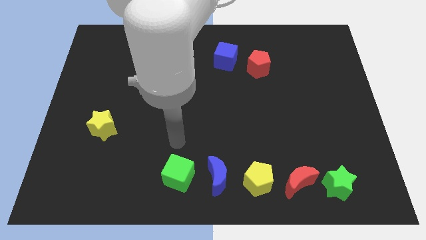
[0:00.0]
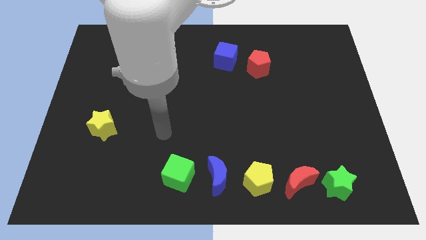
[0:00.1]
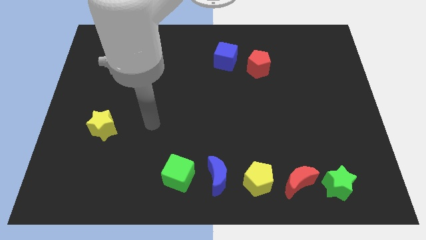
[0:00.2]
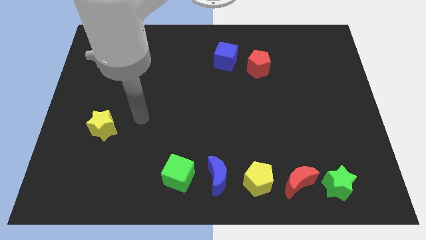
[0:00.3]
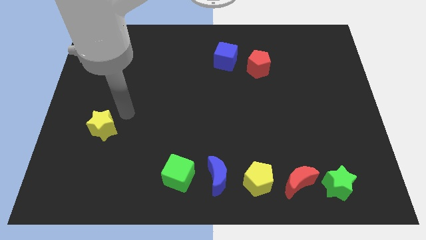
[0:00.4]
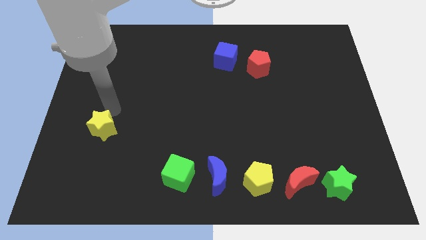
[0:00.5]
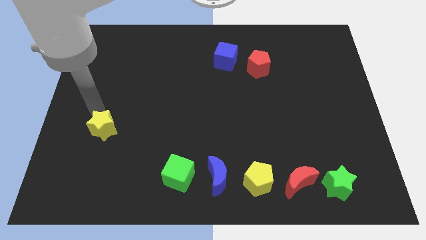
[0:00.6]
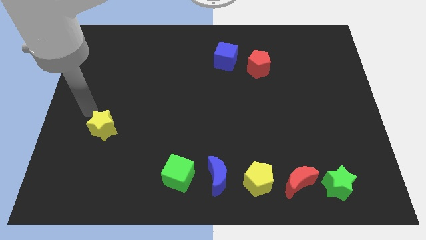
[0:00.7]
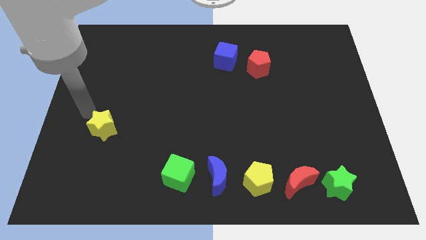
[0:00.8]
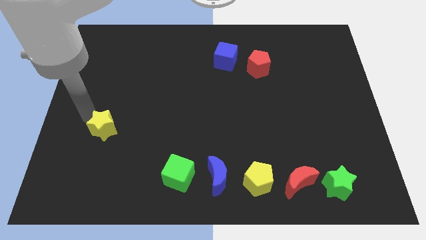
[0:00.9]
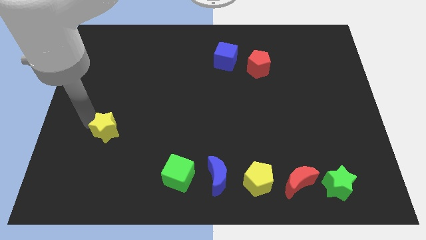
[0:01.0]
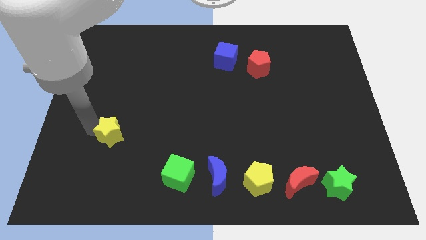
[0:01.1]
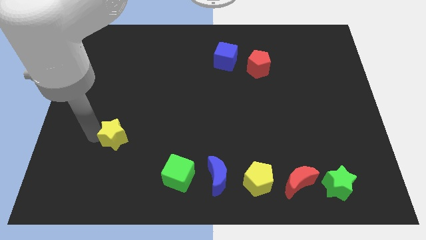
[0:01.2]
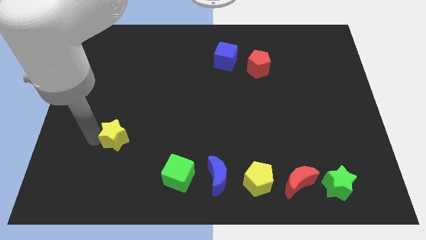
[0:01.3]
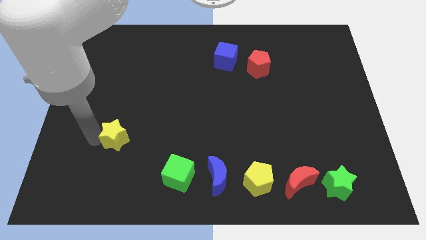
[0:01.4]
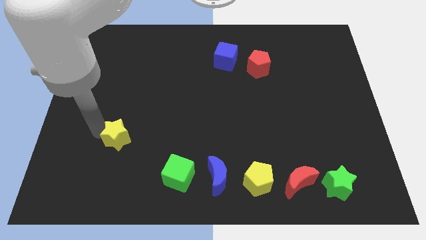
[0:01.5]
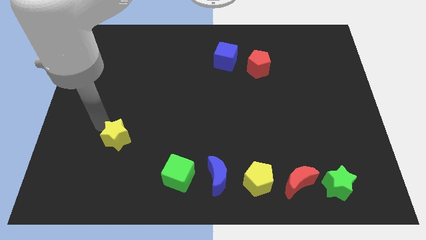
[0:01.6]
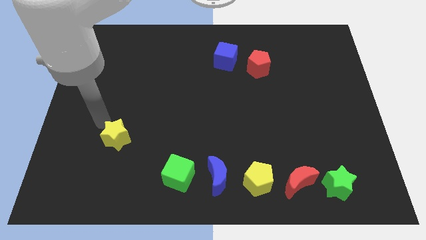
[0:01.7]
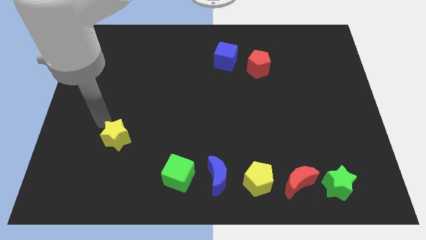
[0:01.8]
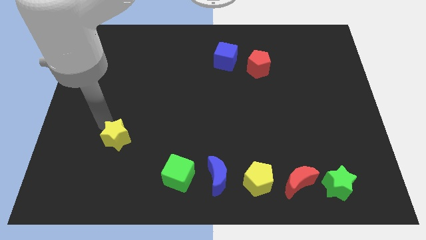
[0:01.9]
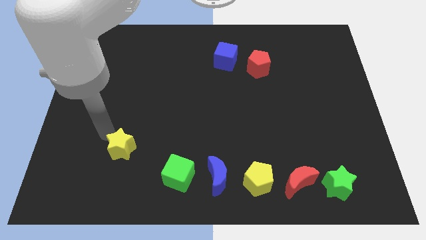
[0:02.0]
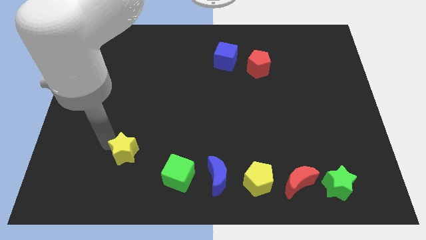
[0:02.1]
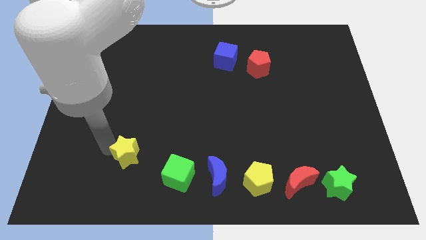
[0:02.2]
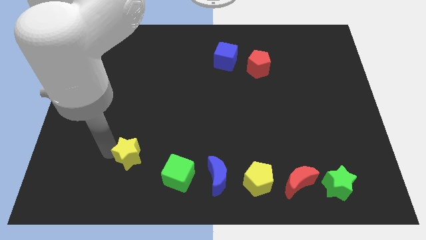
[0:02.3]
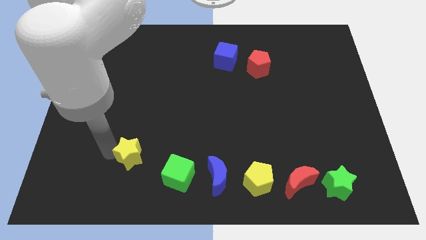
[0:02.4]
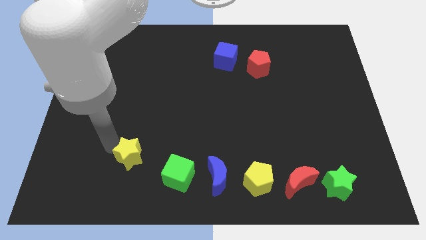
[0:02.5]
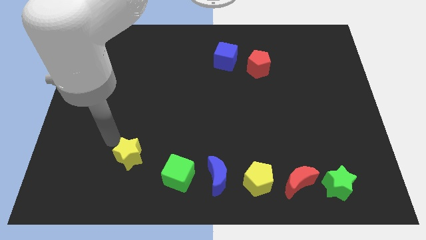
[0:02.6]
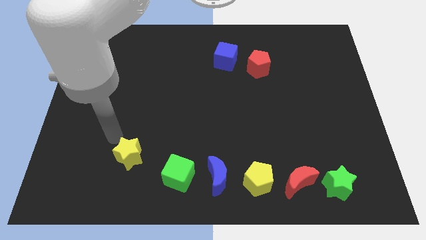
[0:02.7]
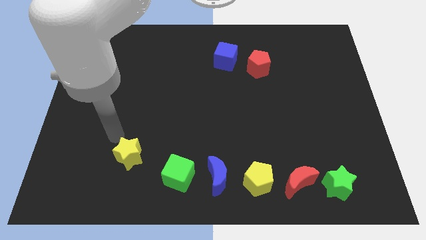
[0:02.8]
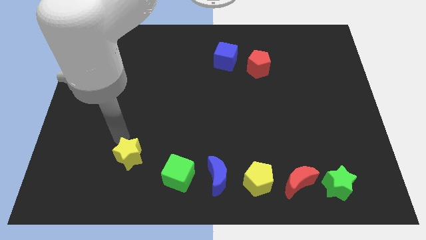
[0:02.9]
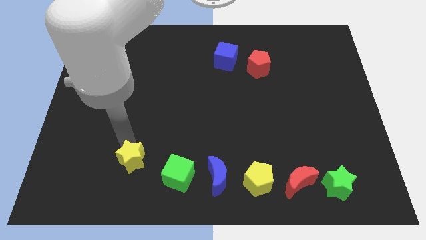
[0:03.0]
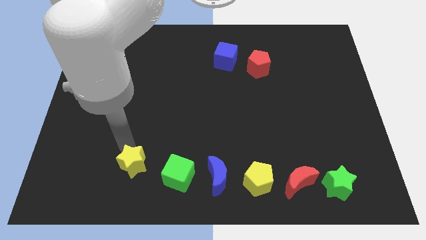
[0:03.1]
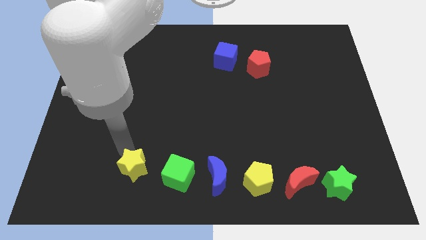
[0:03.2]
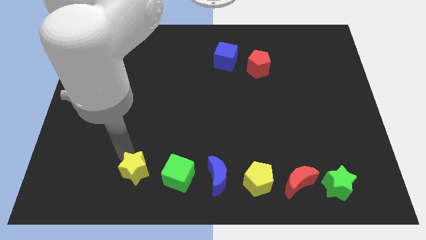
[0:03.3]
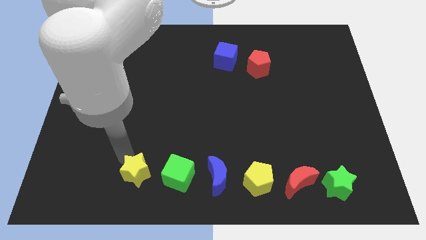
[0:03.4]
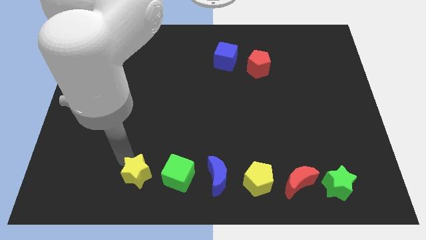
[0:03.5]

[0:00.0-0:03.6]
move yellow star to the bottom of the board

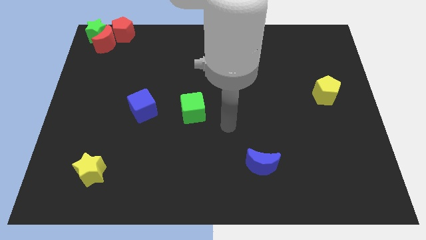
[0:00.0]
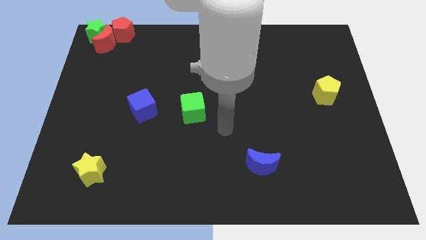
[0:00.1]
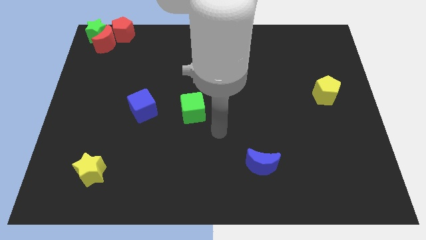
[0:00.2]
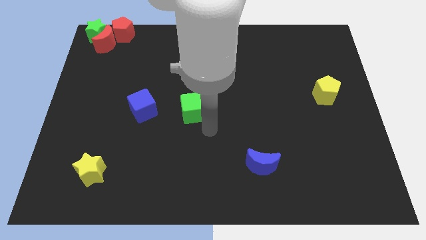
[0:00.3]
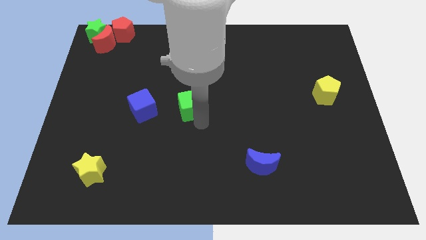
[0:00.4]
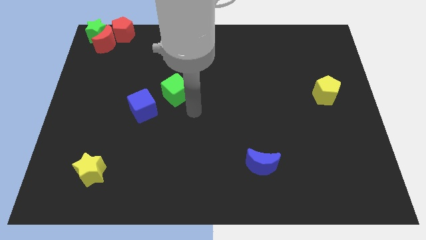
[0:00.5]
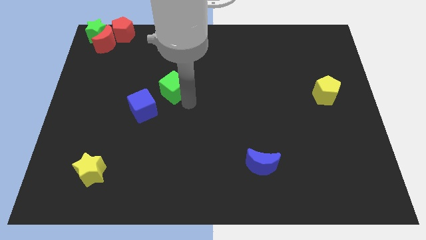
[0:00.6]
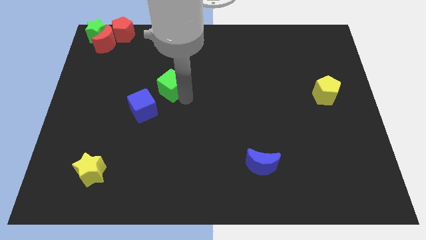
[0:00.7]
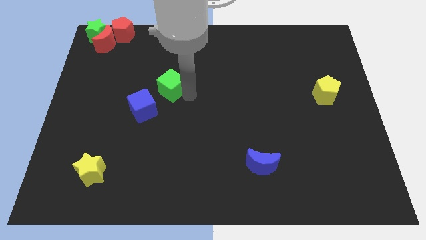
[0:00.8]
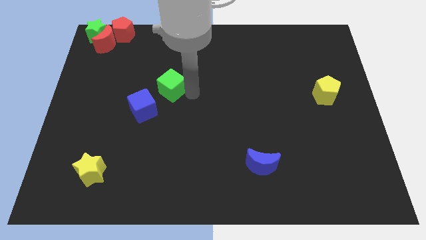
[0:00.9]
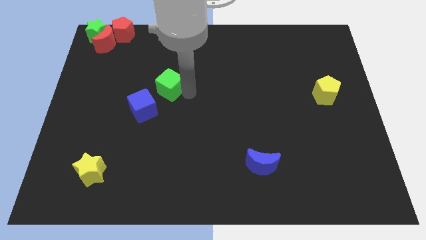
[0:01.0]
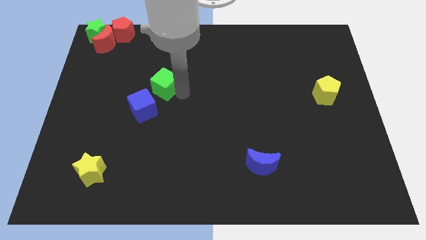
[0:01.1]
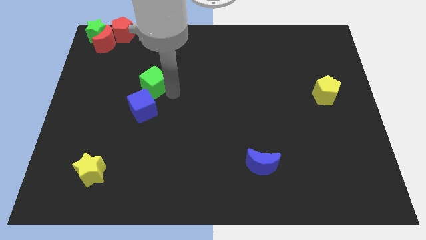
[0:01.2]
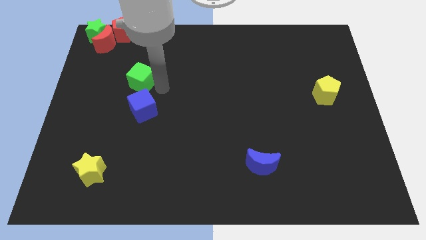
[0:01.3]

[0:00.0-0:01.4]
place green cube above blue cube

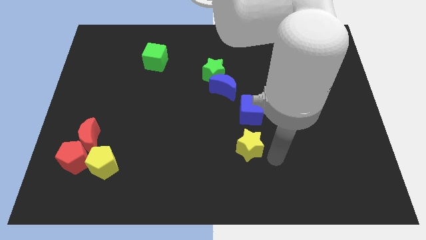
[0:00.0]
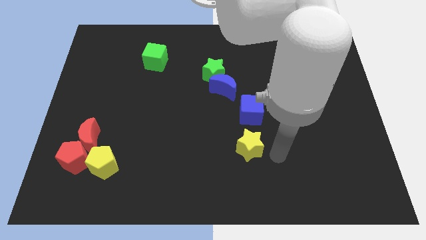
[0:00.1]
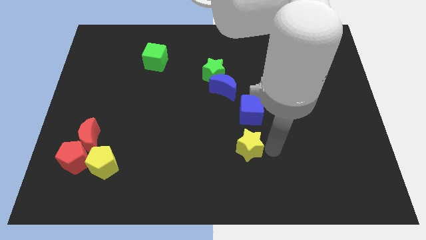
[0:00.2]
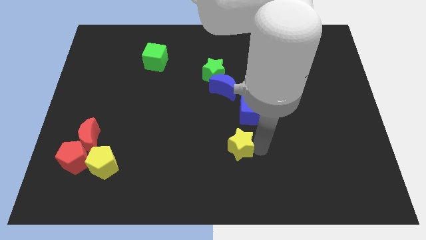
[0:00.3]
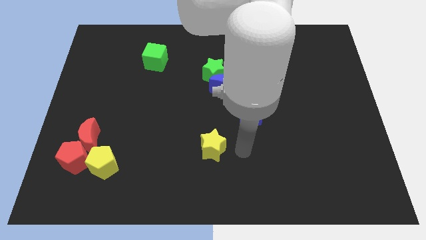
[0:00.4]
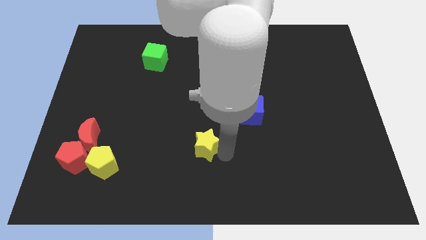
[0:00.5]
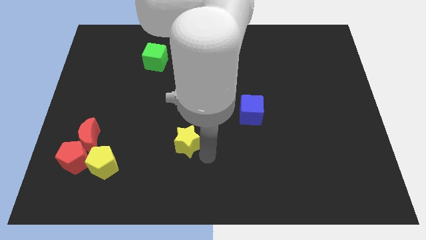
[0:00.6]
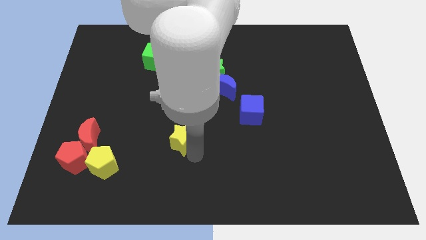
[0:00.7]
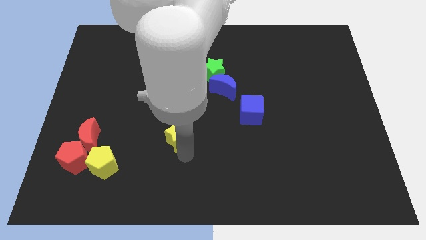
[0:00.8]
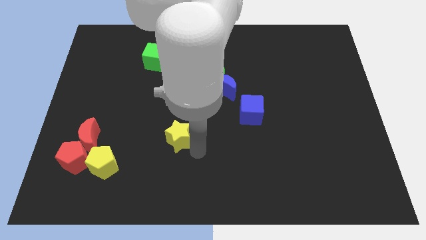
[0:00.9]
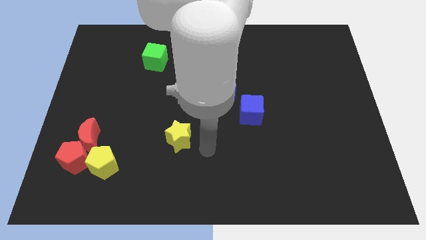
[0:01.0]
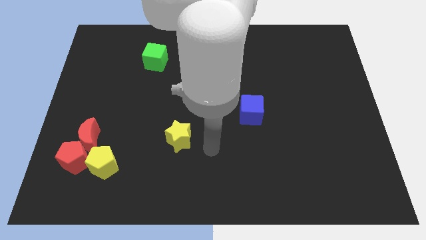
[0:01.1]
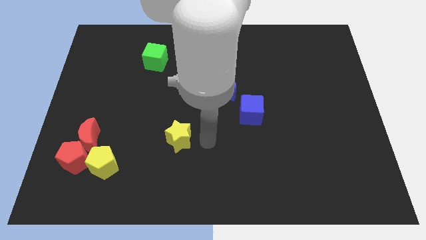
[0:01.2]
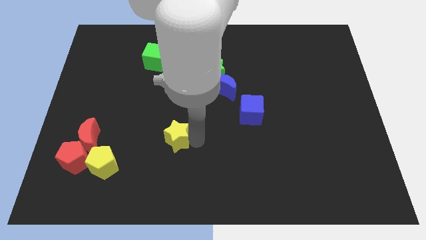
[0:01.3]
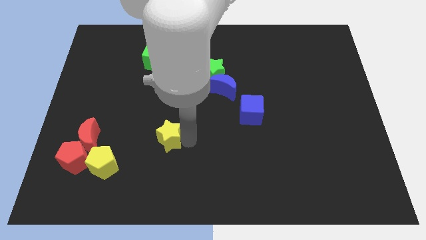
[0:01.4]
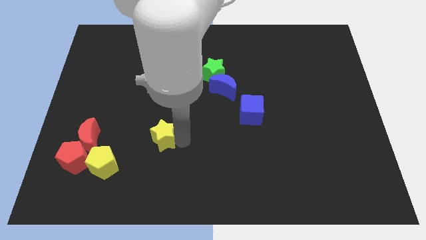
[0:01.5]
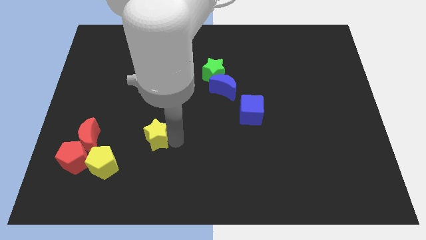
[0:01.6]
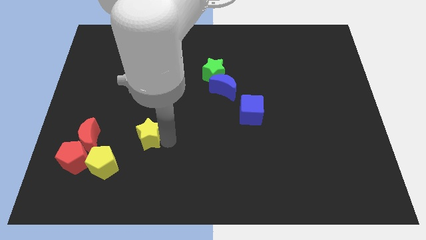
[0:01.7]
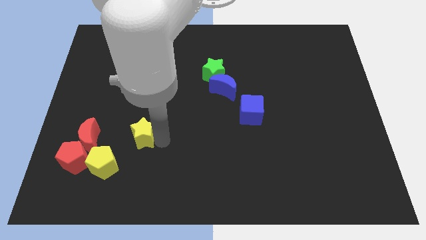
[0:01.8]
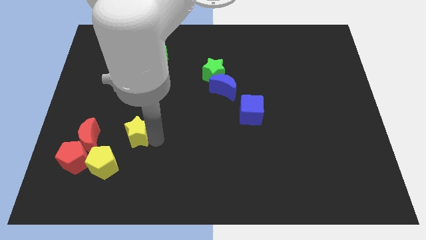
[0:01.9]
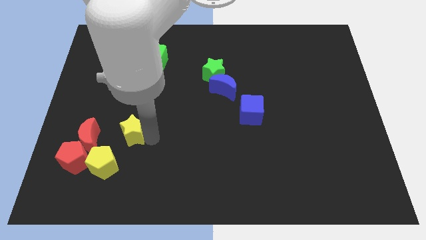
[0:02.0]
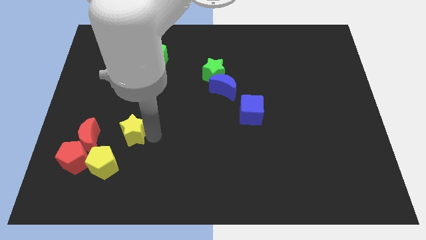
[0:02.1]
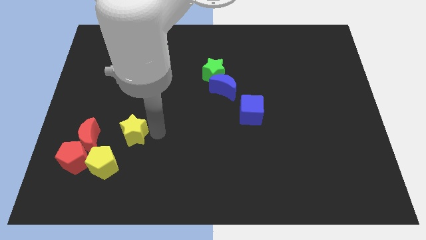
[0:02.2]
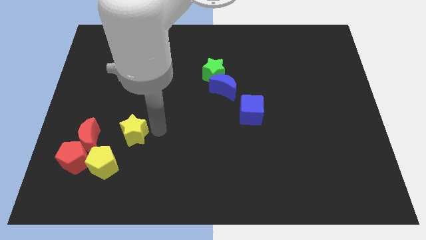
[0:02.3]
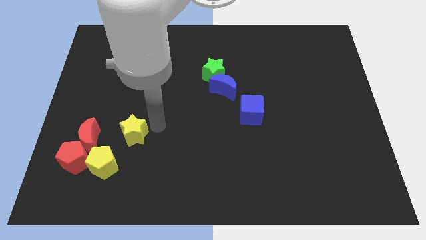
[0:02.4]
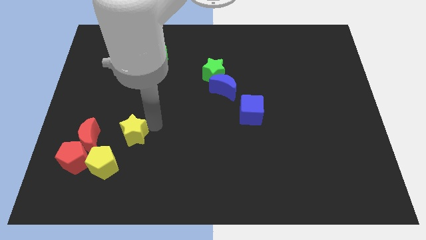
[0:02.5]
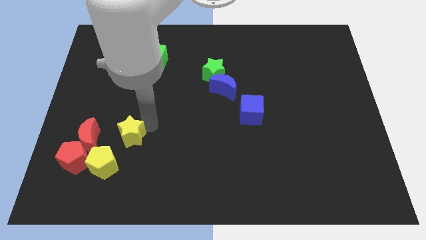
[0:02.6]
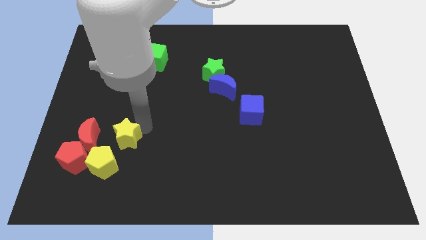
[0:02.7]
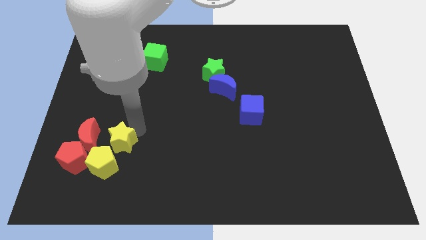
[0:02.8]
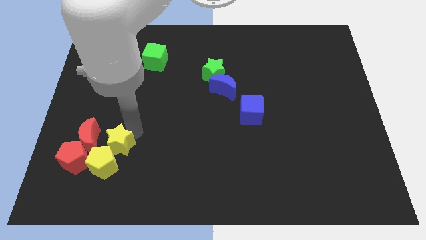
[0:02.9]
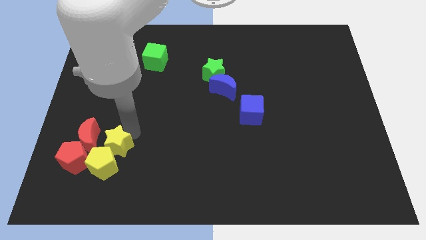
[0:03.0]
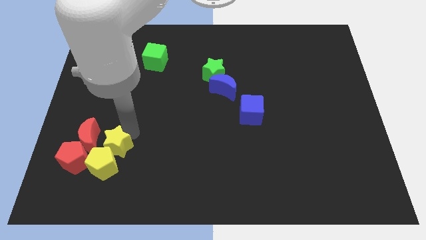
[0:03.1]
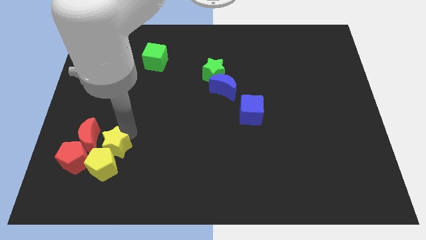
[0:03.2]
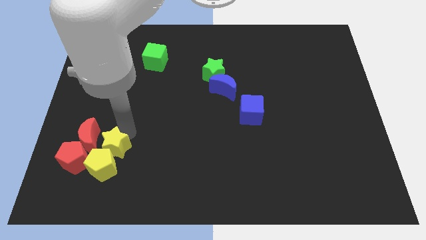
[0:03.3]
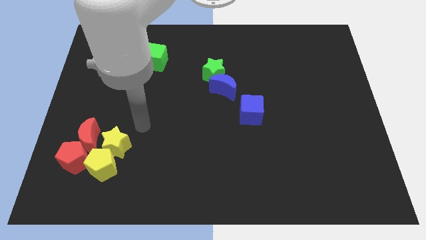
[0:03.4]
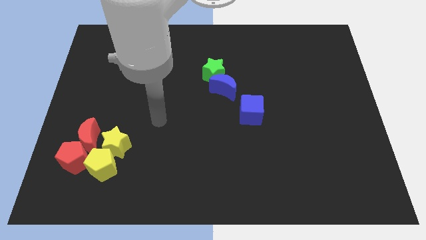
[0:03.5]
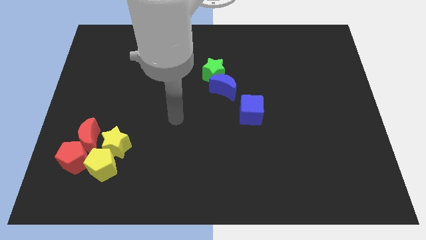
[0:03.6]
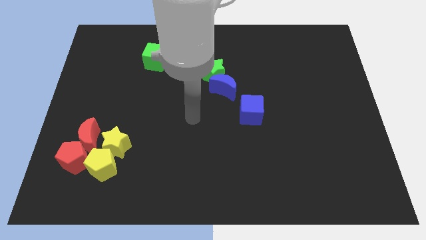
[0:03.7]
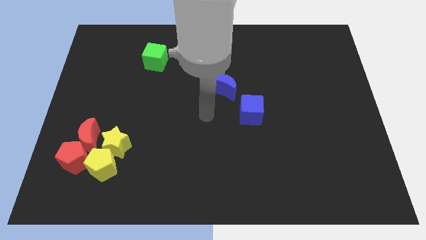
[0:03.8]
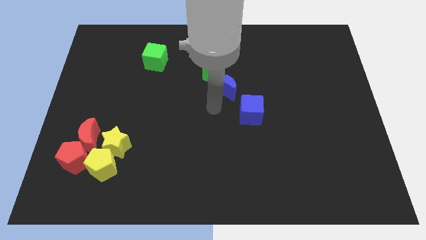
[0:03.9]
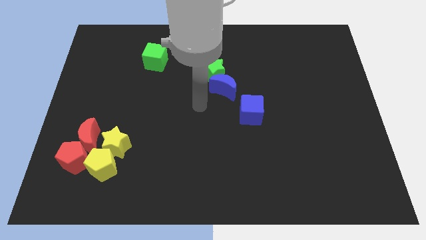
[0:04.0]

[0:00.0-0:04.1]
move yellow star above yellow pentagon

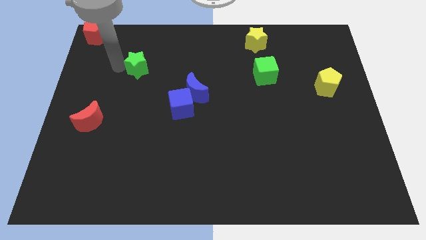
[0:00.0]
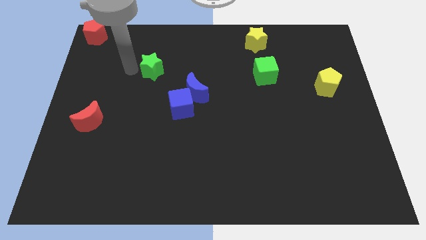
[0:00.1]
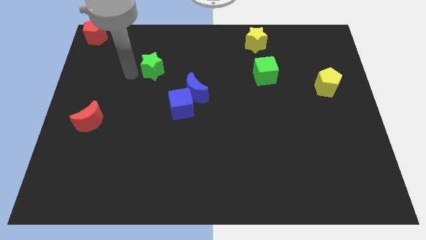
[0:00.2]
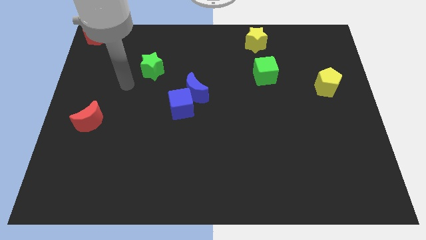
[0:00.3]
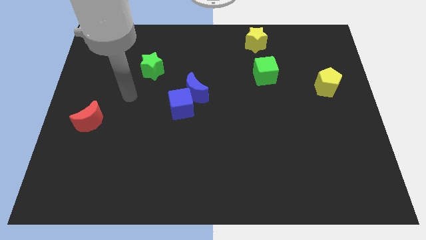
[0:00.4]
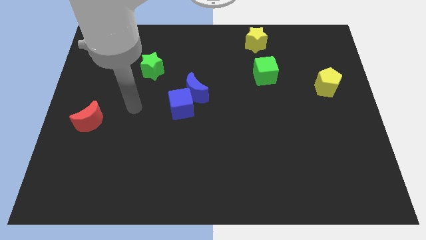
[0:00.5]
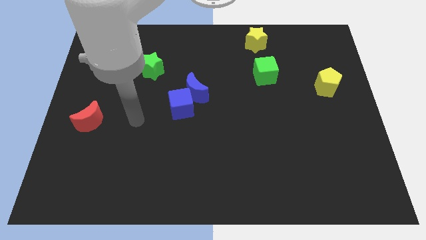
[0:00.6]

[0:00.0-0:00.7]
move green star slightly right
